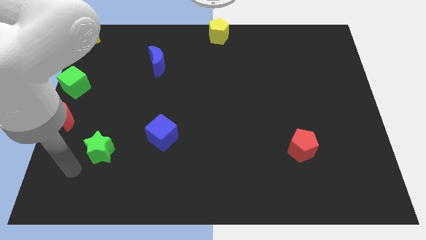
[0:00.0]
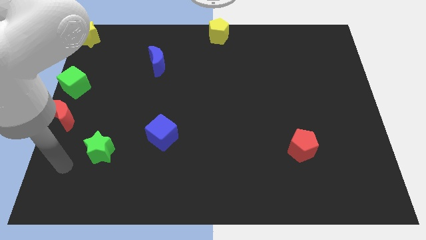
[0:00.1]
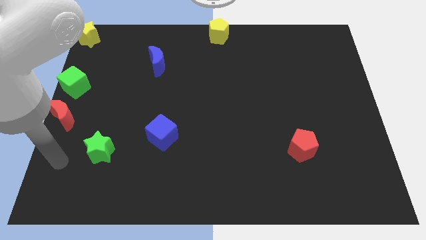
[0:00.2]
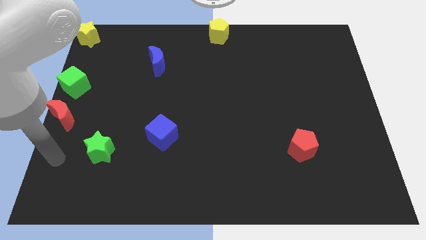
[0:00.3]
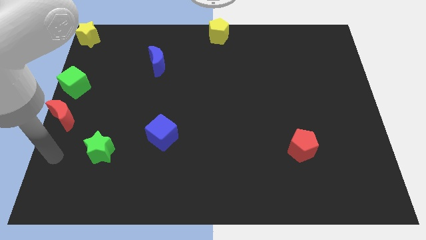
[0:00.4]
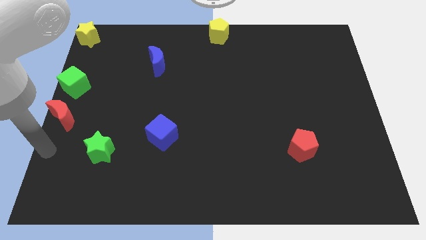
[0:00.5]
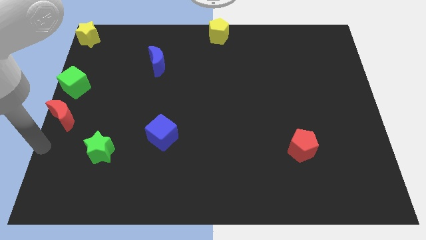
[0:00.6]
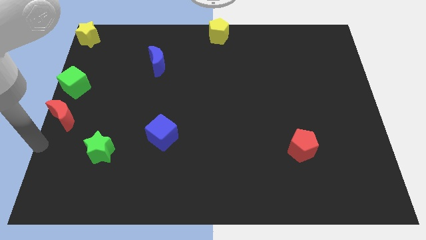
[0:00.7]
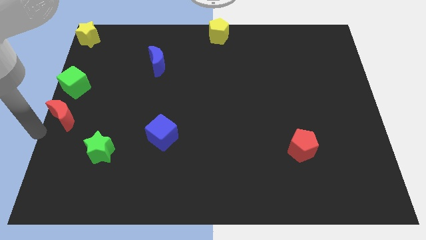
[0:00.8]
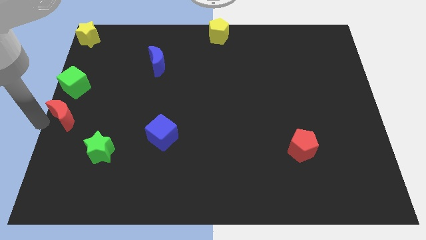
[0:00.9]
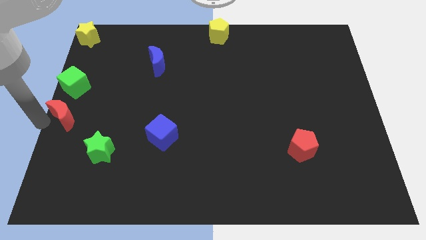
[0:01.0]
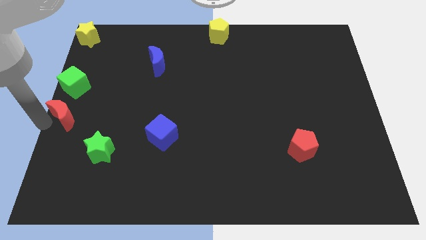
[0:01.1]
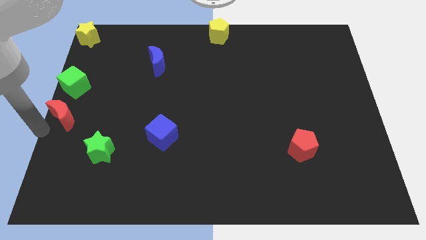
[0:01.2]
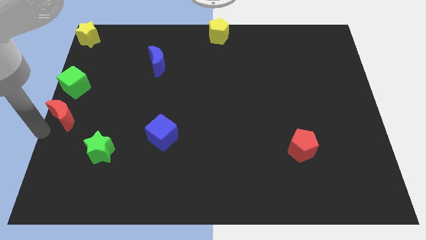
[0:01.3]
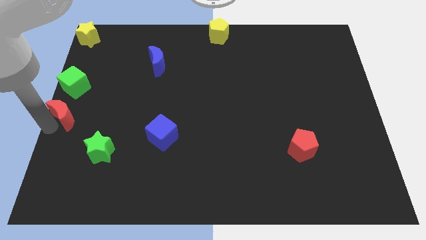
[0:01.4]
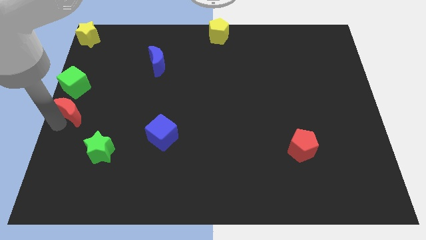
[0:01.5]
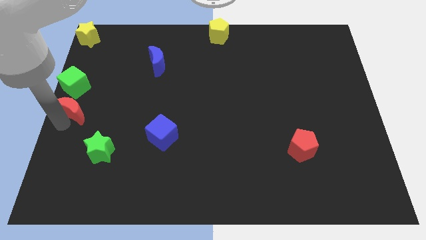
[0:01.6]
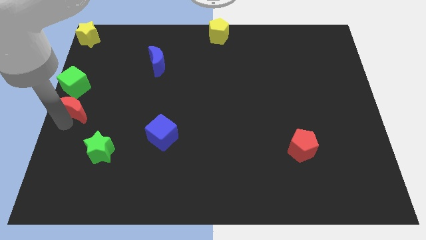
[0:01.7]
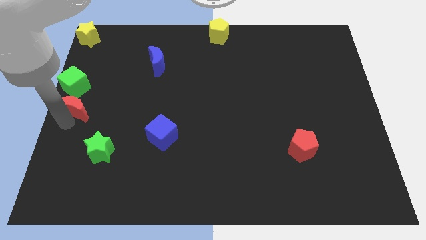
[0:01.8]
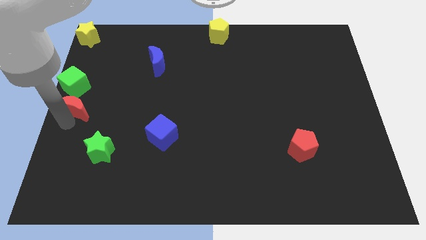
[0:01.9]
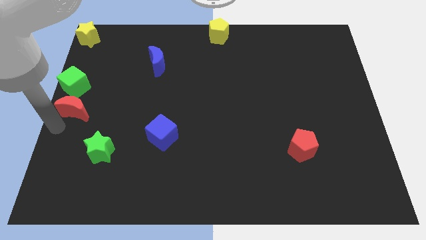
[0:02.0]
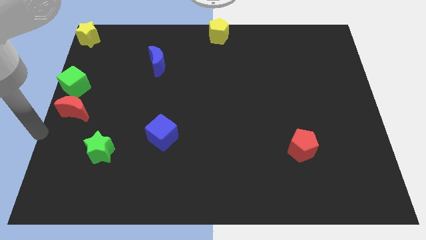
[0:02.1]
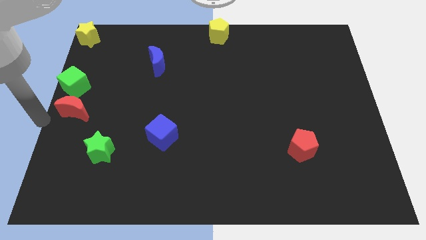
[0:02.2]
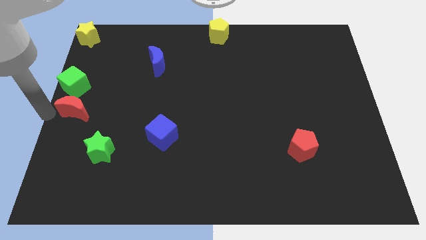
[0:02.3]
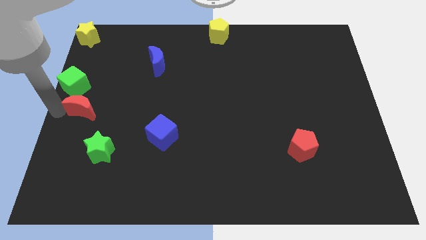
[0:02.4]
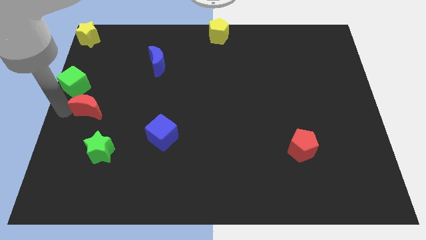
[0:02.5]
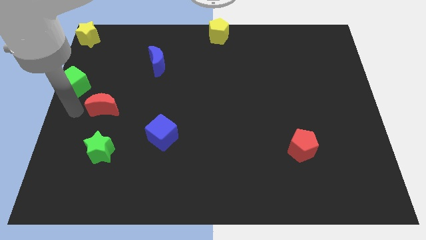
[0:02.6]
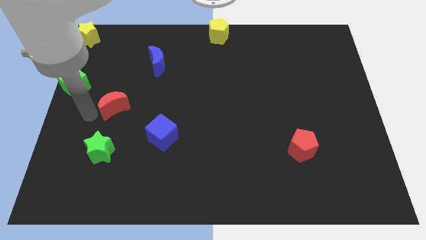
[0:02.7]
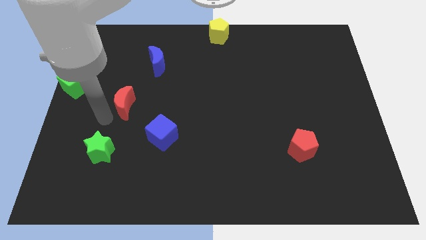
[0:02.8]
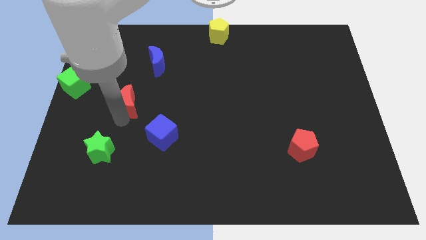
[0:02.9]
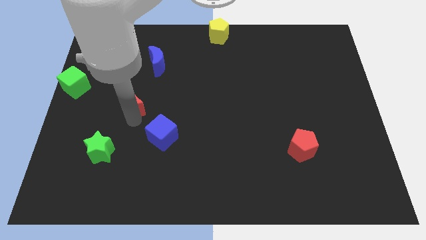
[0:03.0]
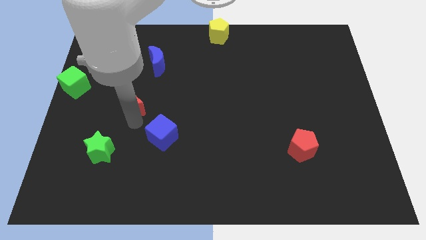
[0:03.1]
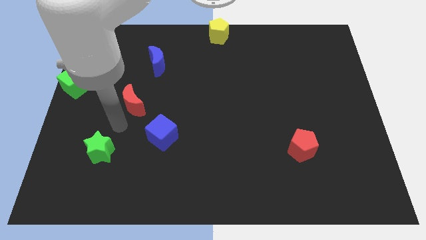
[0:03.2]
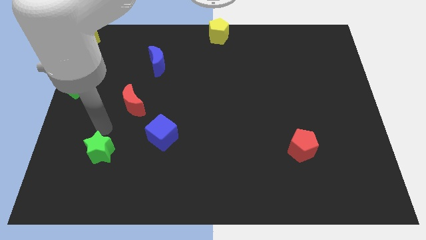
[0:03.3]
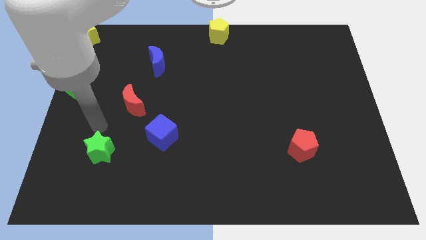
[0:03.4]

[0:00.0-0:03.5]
move the red crescent to the right of the board

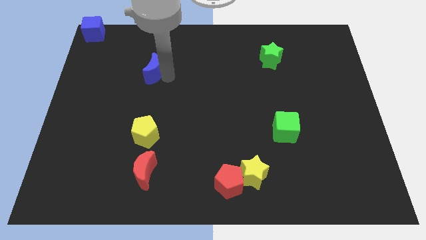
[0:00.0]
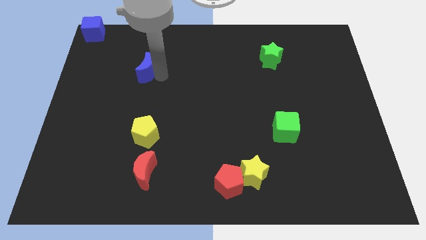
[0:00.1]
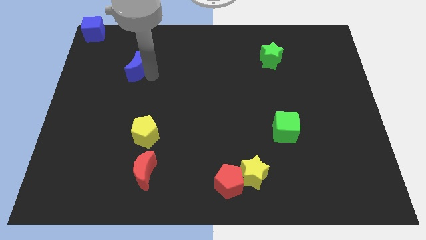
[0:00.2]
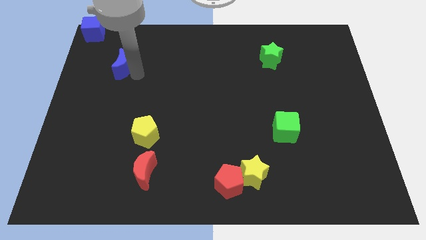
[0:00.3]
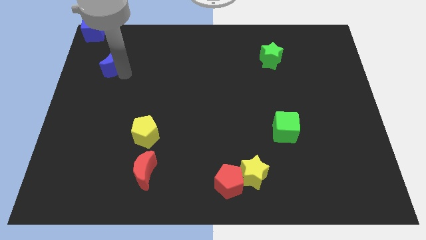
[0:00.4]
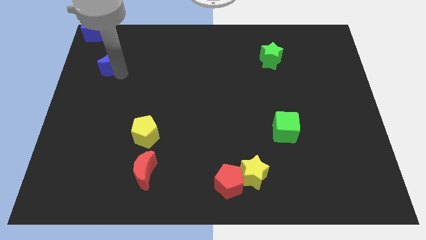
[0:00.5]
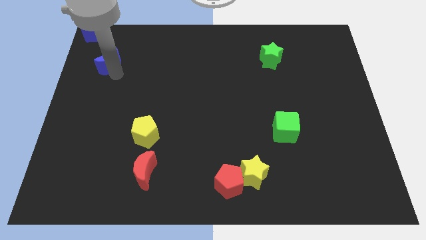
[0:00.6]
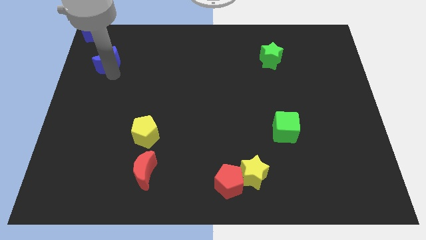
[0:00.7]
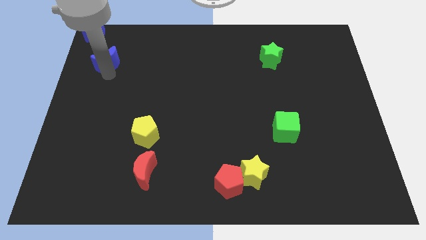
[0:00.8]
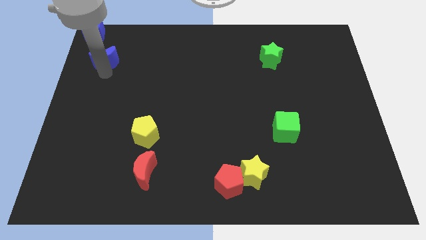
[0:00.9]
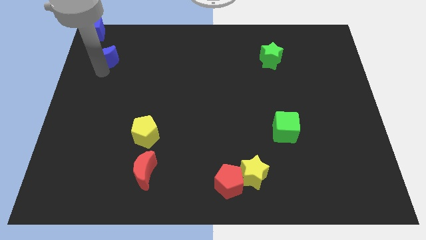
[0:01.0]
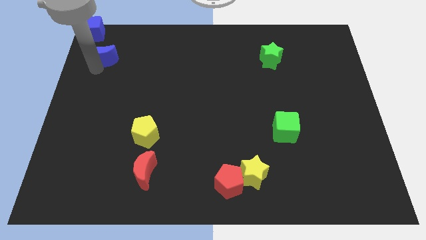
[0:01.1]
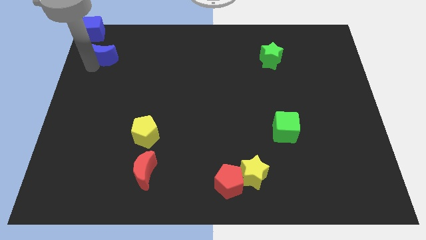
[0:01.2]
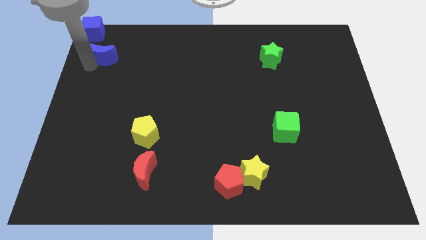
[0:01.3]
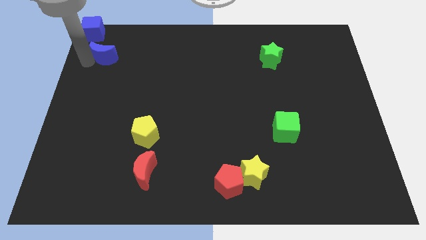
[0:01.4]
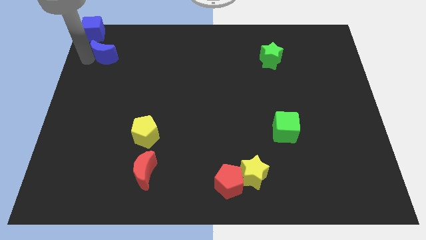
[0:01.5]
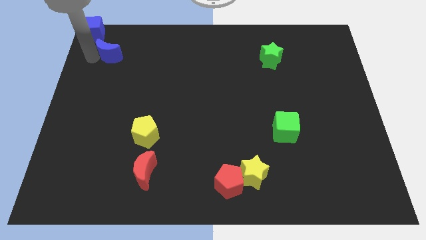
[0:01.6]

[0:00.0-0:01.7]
push the blue moon close to the blue cube

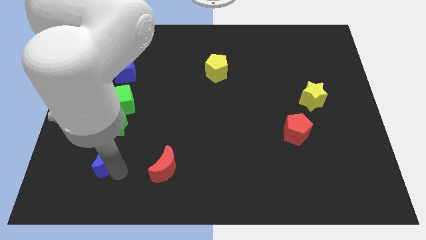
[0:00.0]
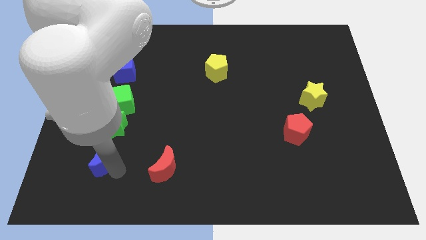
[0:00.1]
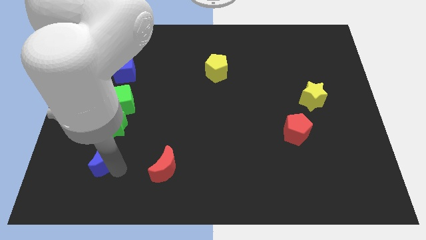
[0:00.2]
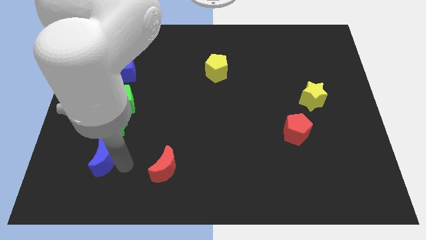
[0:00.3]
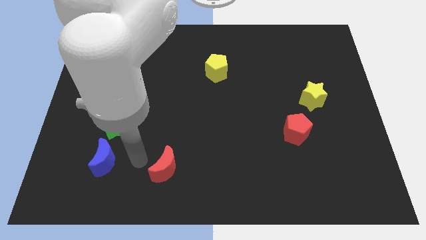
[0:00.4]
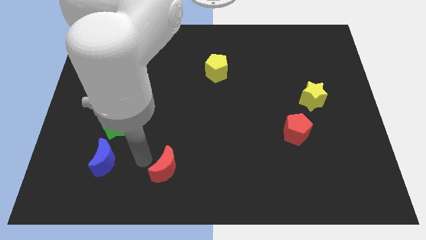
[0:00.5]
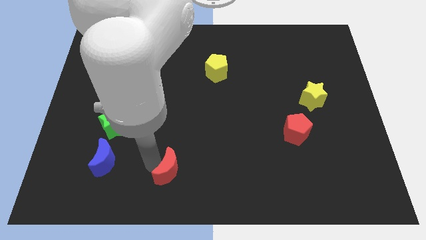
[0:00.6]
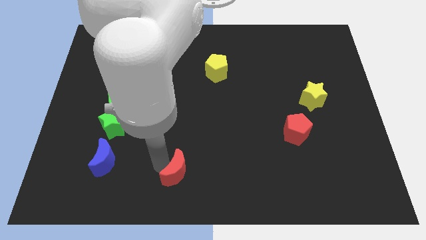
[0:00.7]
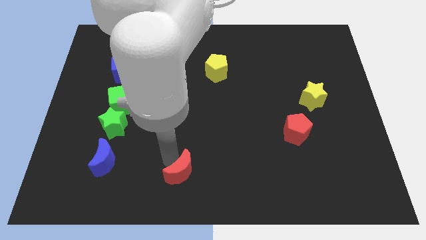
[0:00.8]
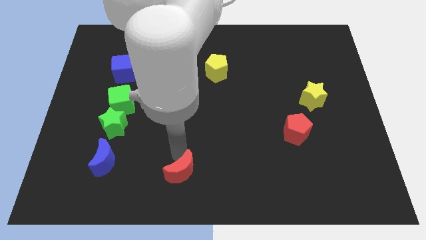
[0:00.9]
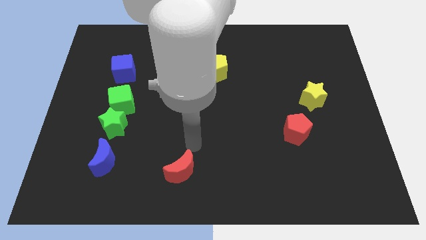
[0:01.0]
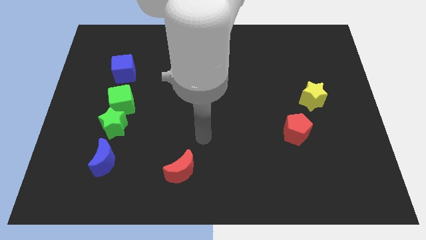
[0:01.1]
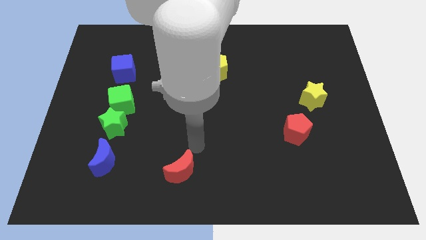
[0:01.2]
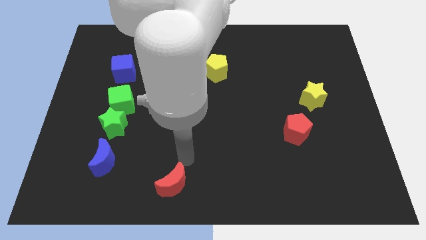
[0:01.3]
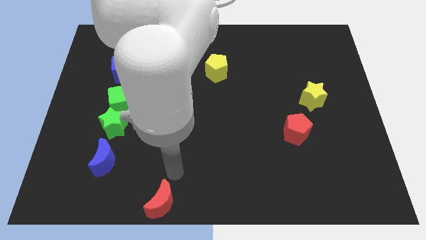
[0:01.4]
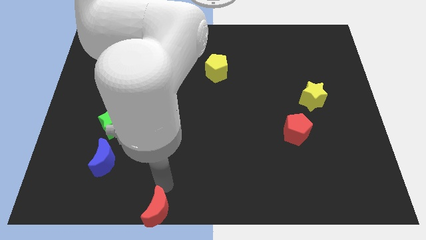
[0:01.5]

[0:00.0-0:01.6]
place the red crescent to the bottom center of the board

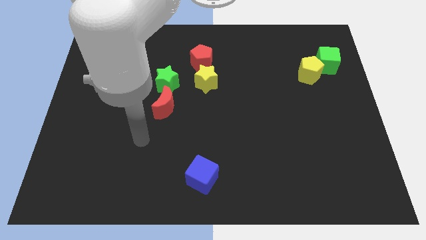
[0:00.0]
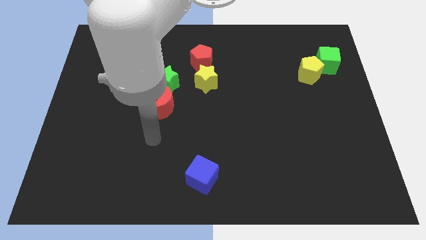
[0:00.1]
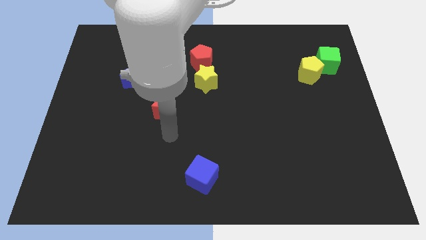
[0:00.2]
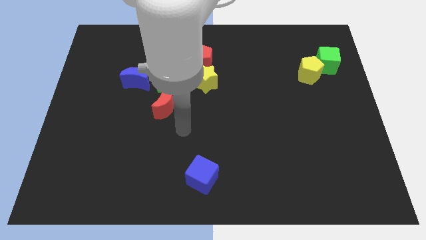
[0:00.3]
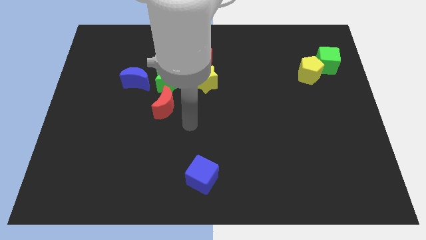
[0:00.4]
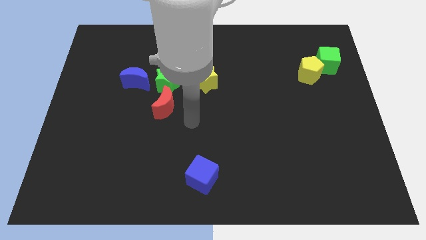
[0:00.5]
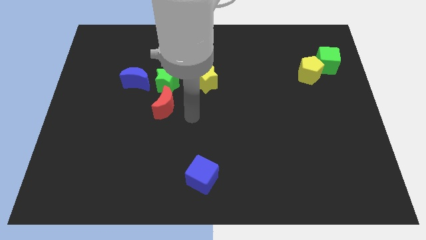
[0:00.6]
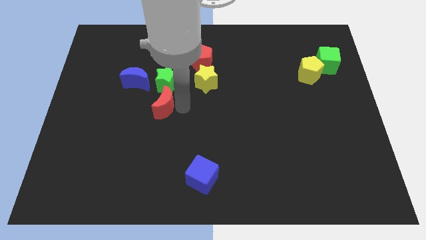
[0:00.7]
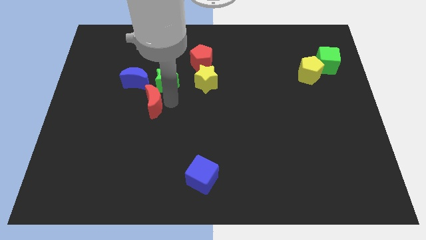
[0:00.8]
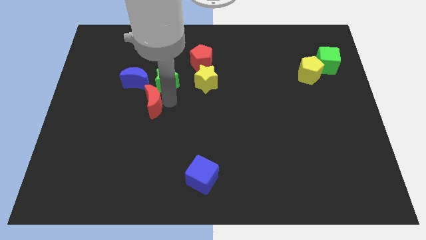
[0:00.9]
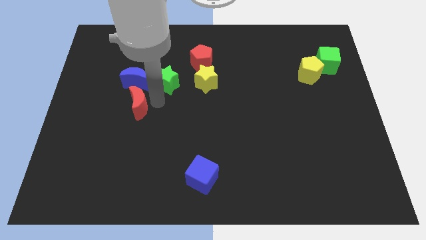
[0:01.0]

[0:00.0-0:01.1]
slide red moon below the blue moon

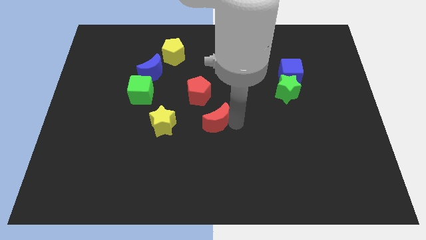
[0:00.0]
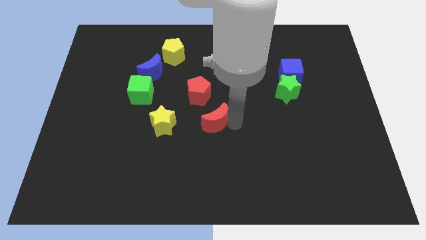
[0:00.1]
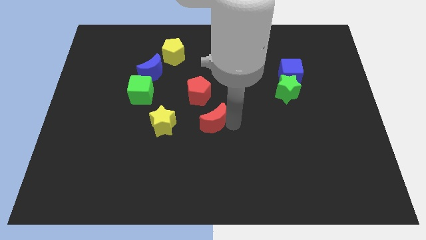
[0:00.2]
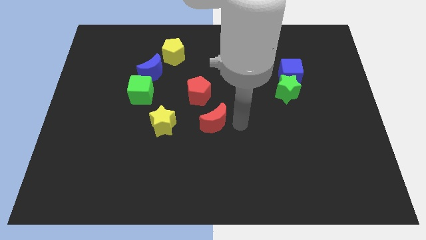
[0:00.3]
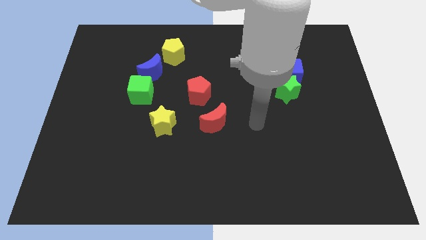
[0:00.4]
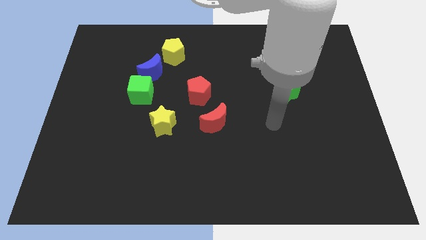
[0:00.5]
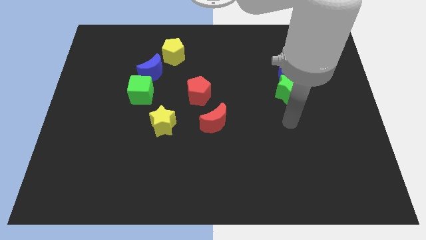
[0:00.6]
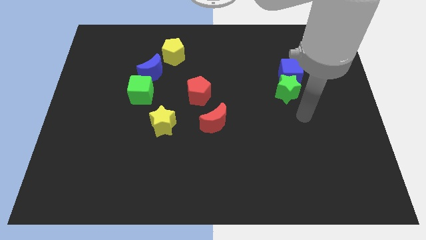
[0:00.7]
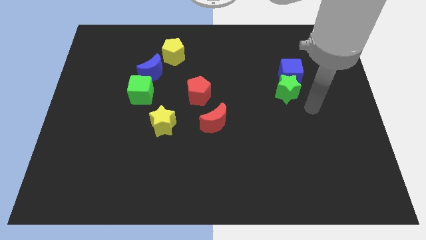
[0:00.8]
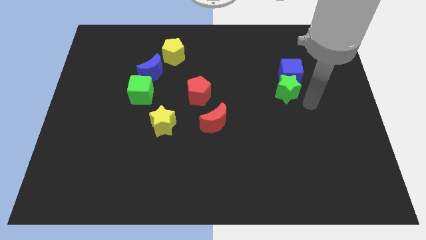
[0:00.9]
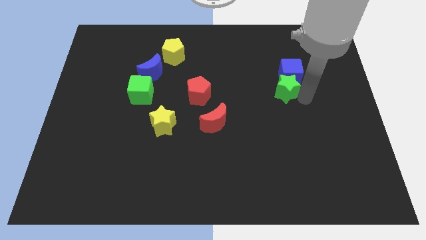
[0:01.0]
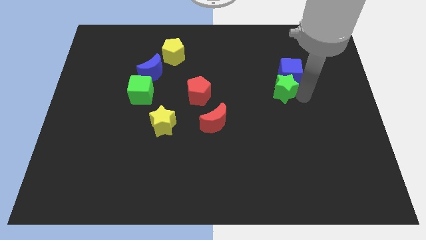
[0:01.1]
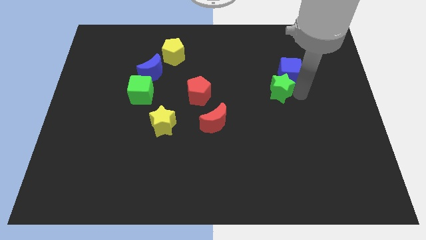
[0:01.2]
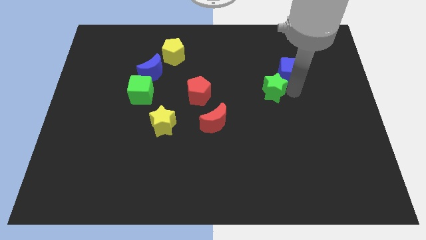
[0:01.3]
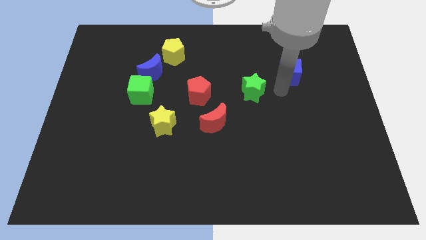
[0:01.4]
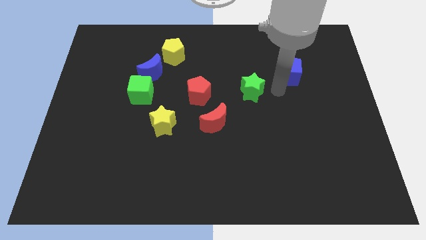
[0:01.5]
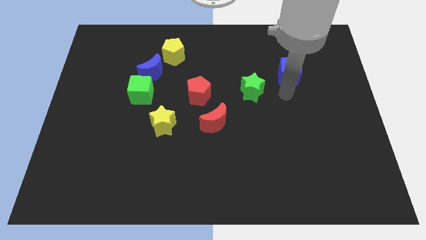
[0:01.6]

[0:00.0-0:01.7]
separate the green star and blue cube
